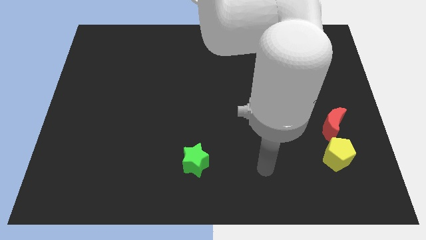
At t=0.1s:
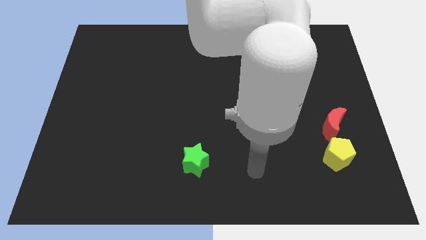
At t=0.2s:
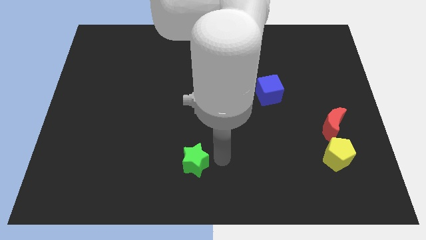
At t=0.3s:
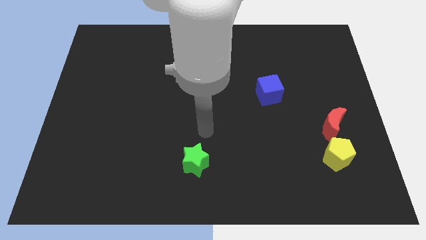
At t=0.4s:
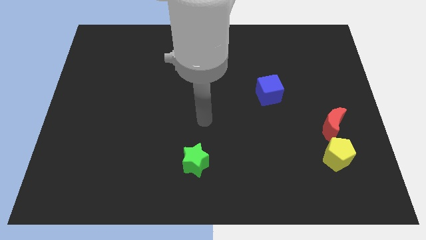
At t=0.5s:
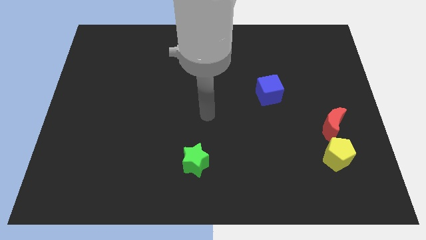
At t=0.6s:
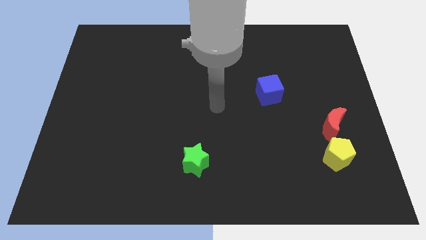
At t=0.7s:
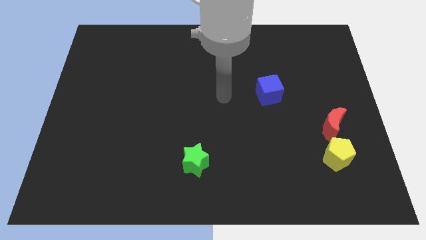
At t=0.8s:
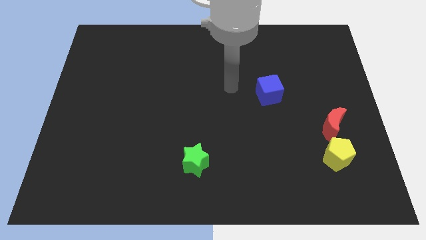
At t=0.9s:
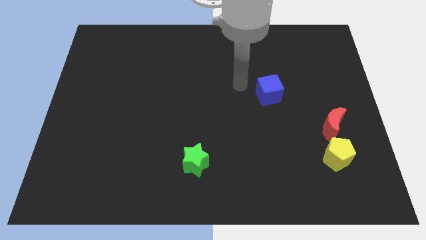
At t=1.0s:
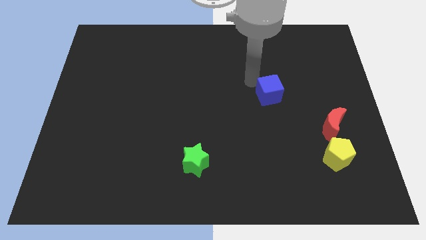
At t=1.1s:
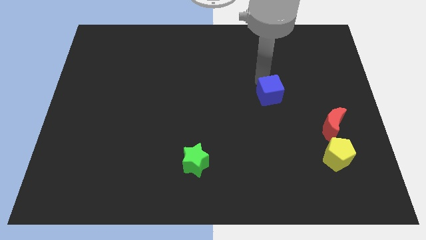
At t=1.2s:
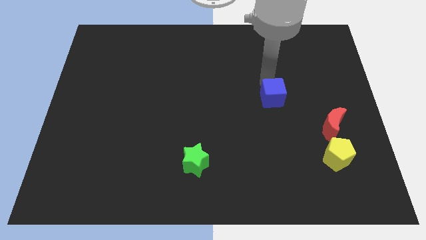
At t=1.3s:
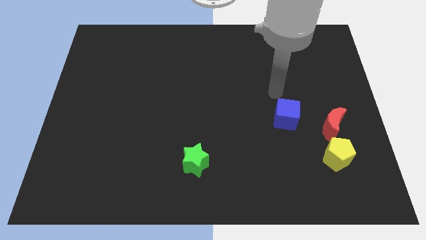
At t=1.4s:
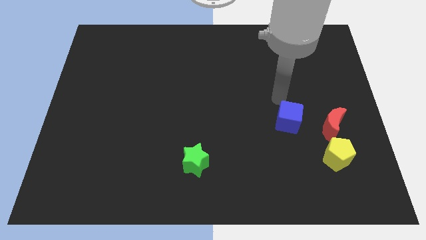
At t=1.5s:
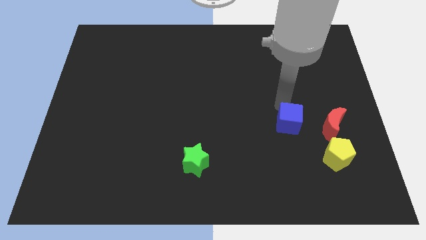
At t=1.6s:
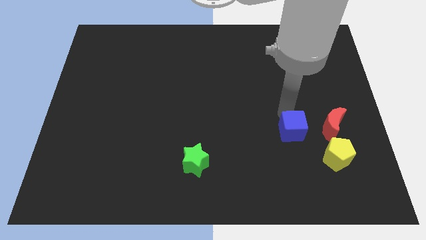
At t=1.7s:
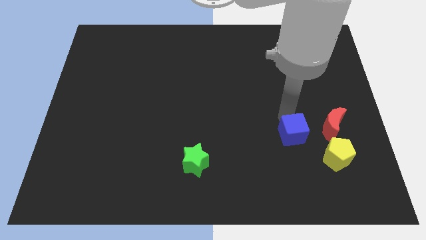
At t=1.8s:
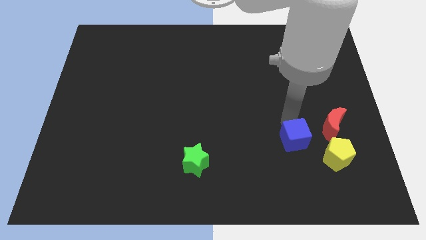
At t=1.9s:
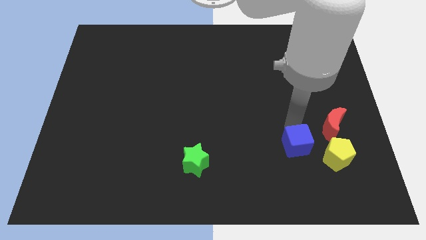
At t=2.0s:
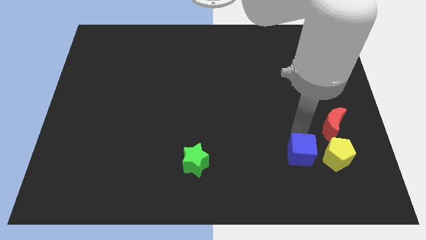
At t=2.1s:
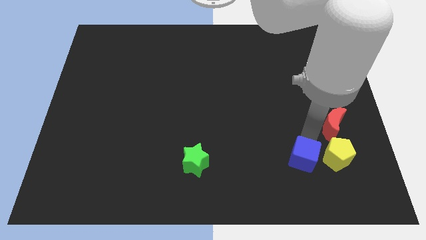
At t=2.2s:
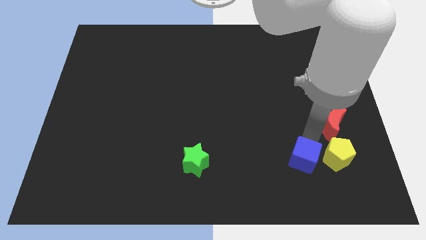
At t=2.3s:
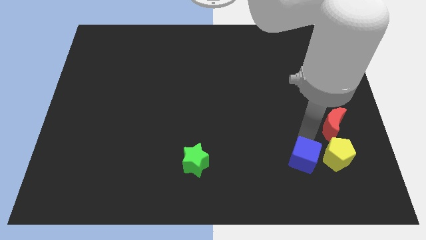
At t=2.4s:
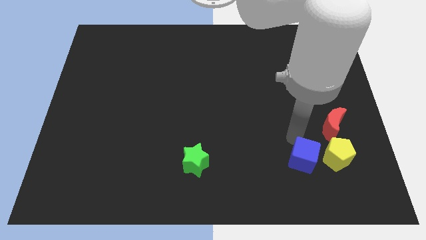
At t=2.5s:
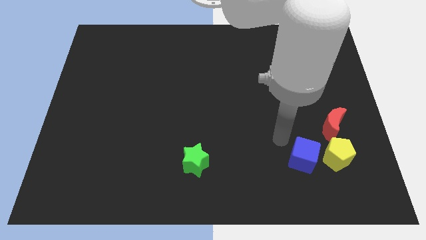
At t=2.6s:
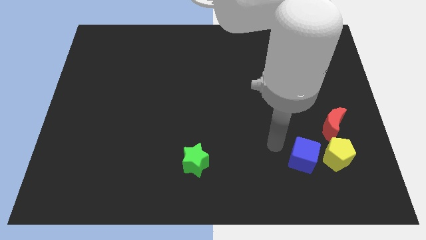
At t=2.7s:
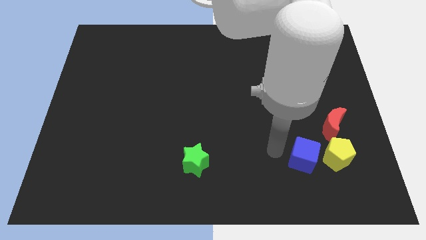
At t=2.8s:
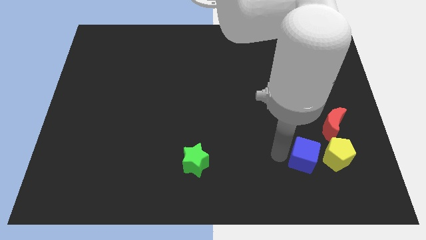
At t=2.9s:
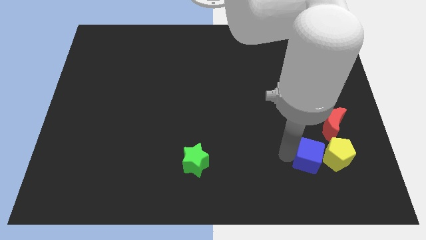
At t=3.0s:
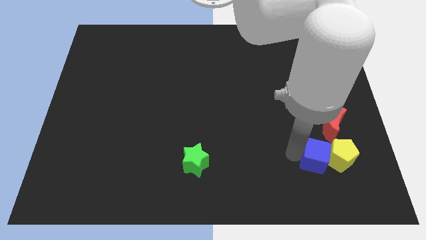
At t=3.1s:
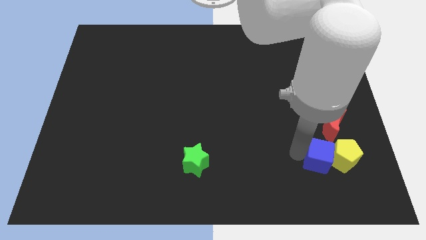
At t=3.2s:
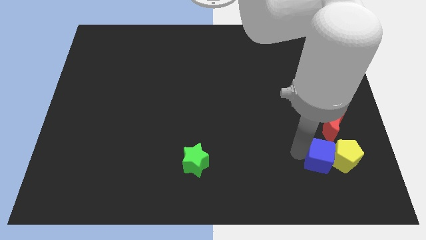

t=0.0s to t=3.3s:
slide the blue block to the yellow block

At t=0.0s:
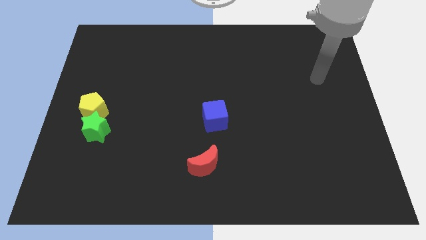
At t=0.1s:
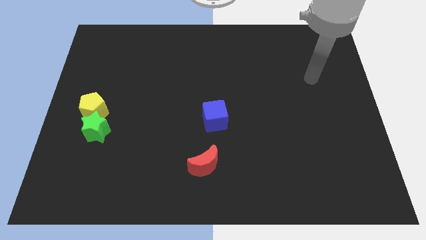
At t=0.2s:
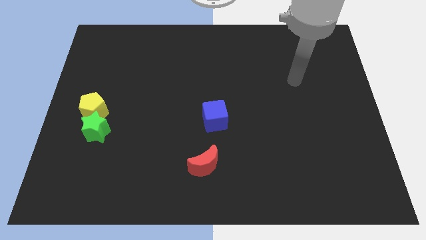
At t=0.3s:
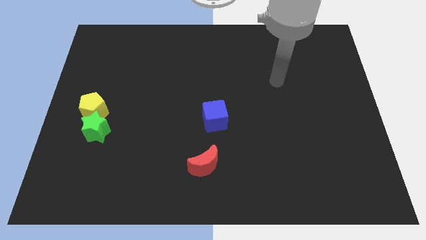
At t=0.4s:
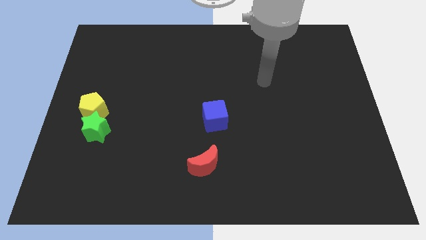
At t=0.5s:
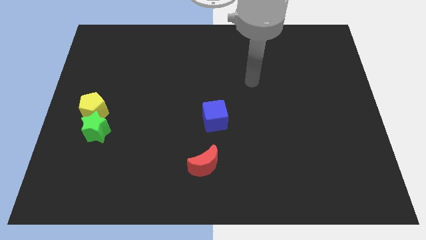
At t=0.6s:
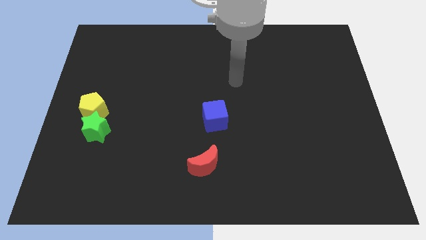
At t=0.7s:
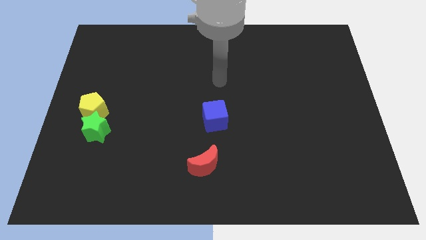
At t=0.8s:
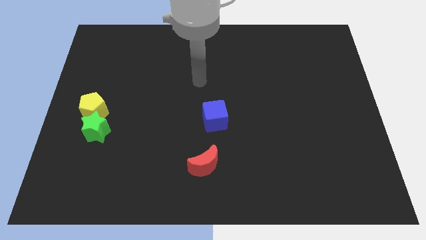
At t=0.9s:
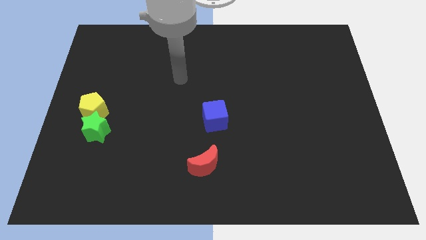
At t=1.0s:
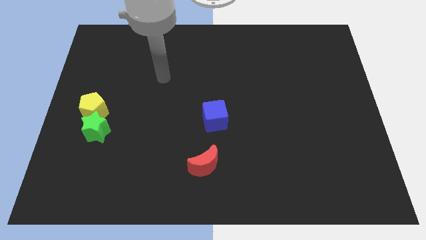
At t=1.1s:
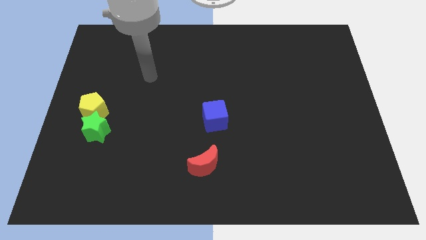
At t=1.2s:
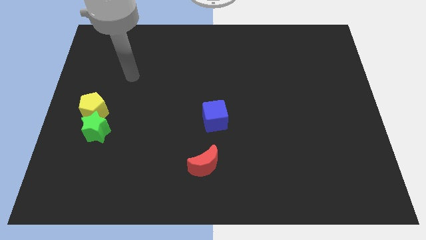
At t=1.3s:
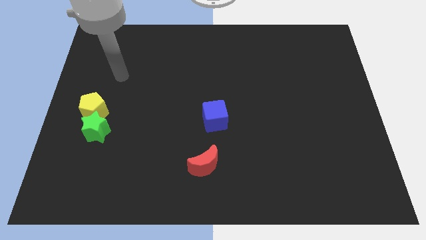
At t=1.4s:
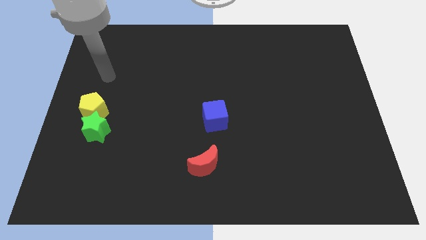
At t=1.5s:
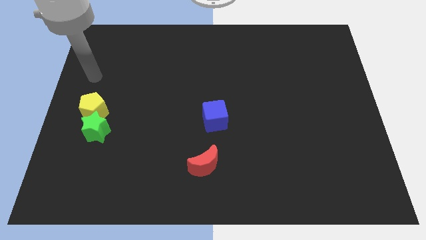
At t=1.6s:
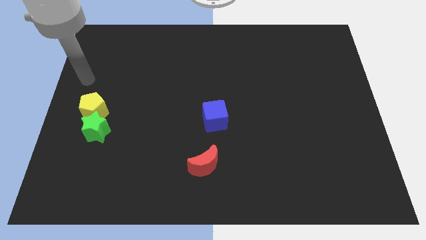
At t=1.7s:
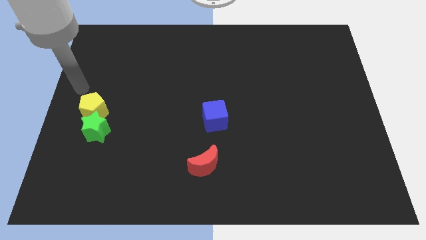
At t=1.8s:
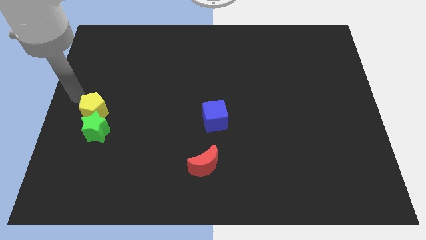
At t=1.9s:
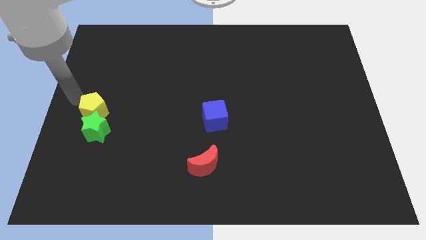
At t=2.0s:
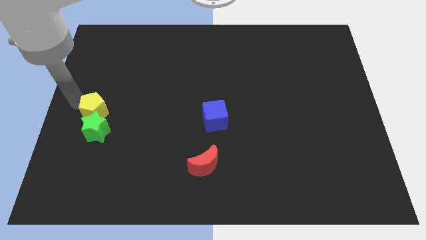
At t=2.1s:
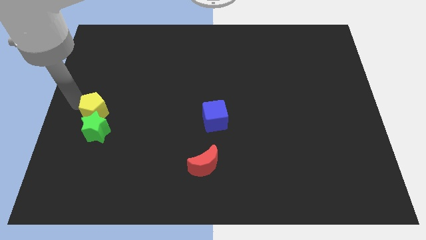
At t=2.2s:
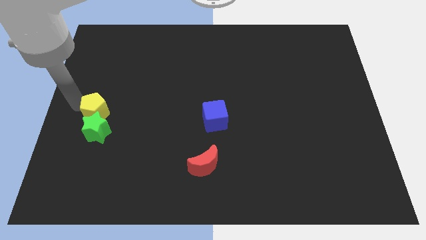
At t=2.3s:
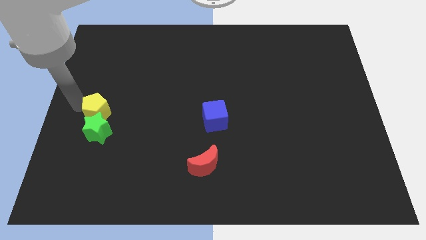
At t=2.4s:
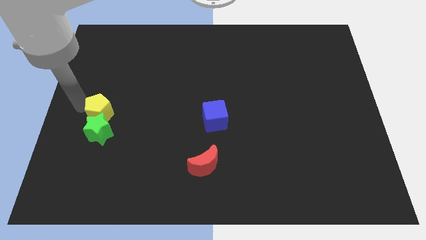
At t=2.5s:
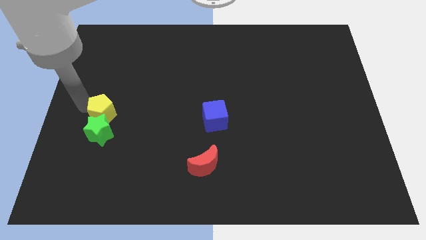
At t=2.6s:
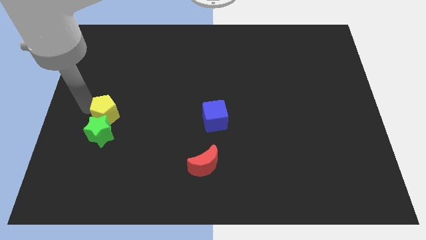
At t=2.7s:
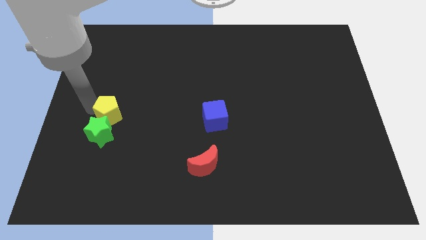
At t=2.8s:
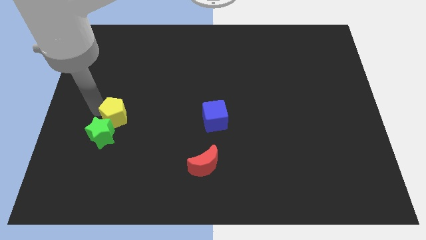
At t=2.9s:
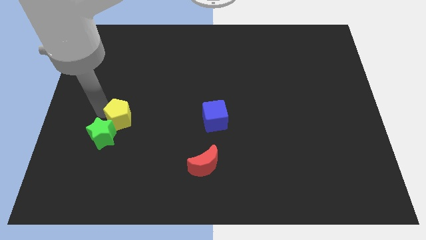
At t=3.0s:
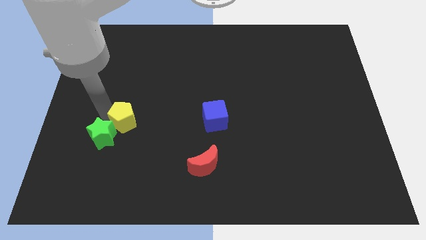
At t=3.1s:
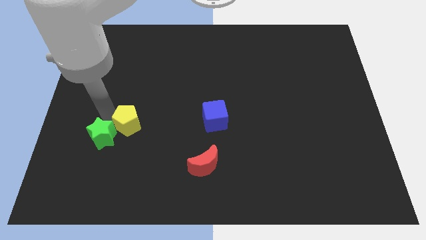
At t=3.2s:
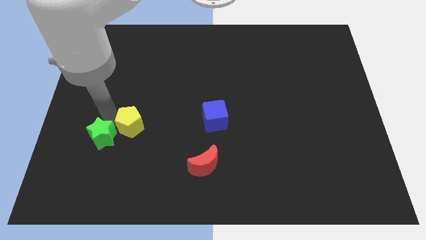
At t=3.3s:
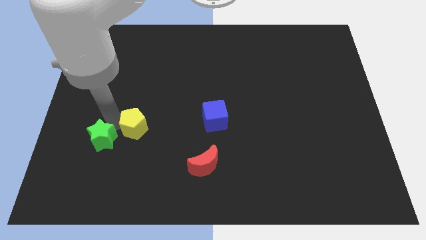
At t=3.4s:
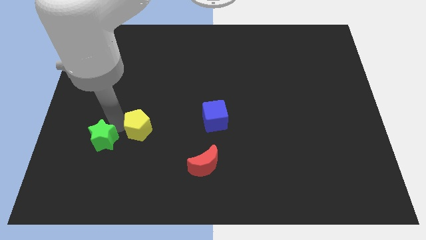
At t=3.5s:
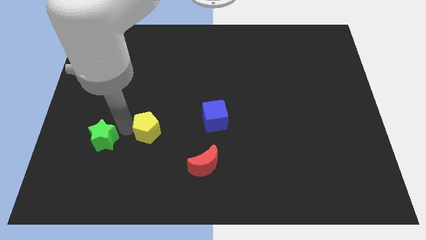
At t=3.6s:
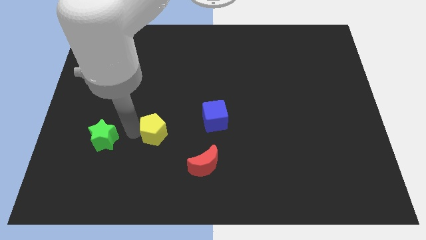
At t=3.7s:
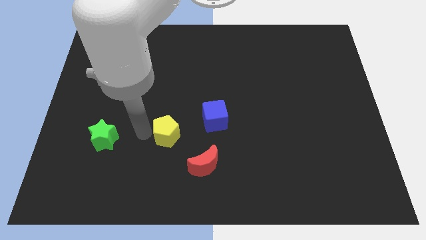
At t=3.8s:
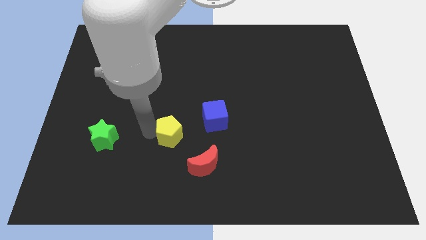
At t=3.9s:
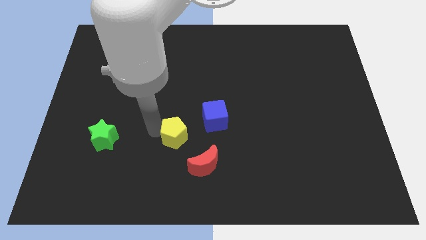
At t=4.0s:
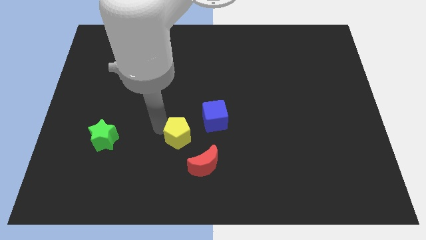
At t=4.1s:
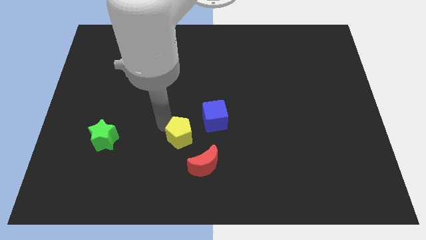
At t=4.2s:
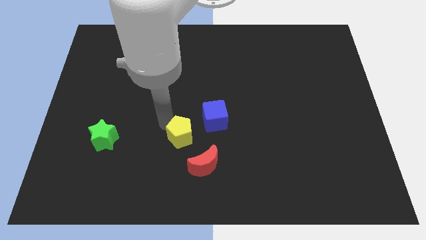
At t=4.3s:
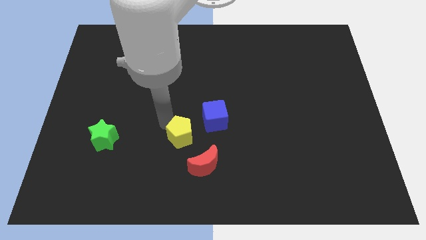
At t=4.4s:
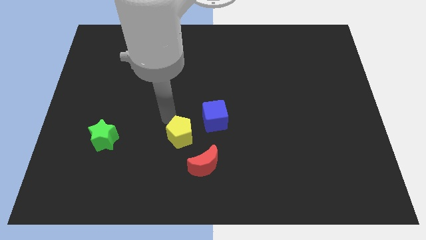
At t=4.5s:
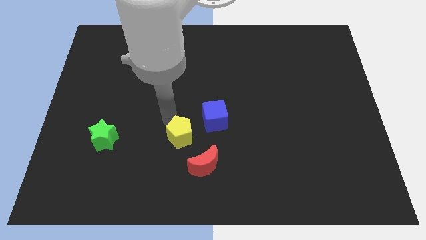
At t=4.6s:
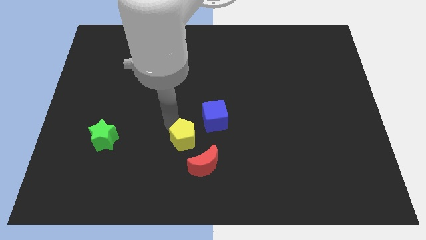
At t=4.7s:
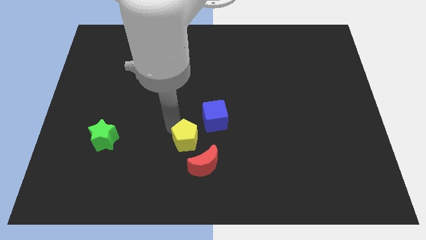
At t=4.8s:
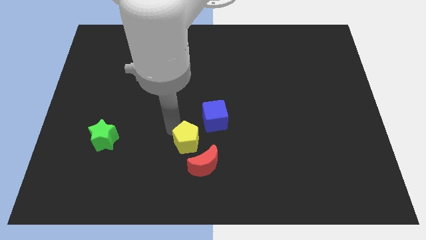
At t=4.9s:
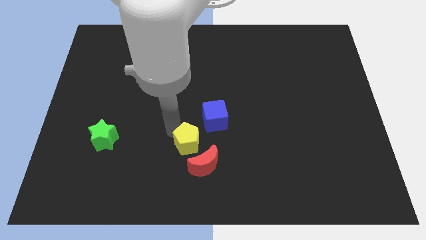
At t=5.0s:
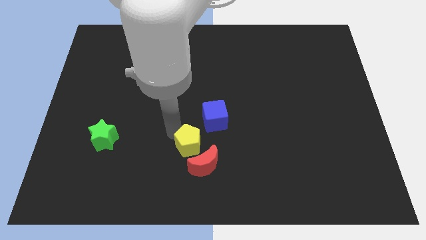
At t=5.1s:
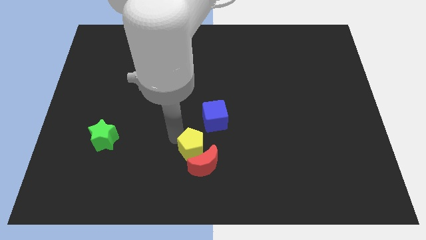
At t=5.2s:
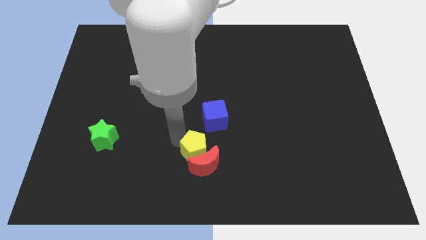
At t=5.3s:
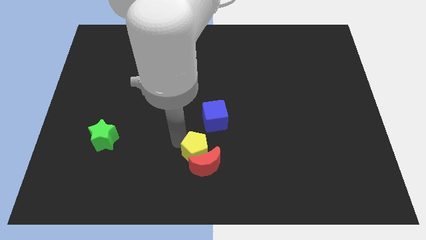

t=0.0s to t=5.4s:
move the pentagon close to the red moon

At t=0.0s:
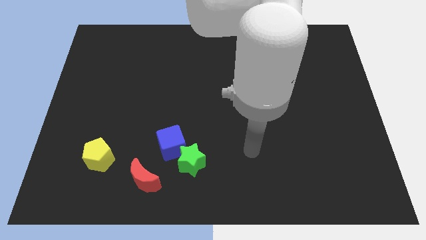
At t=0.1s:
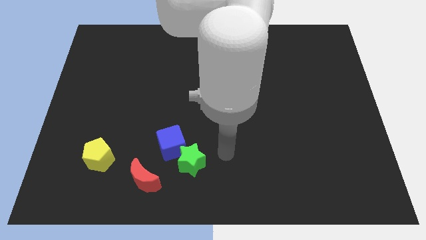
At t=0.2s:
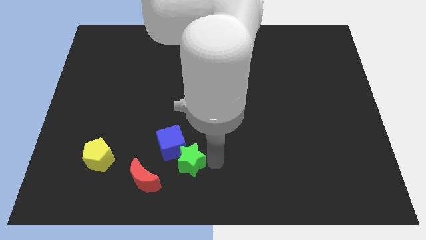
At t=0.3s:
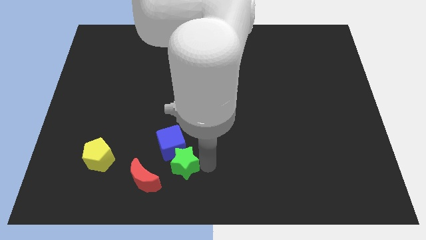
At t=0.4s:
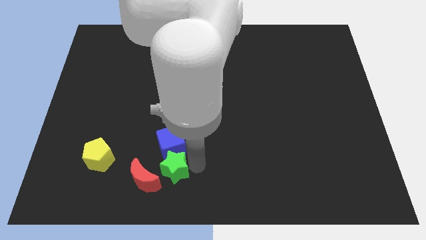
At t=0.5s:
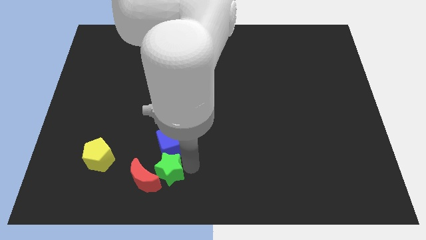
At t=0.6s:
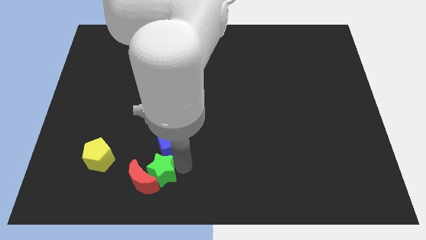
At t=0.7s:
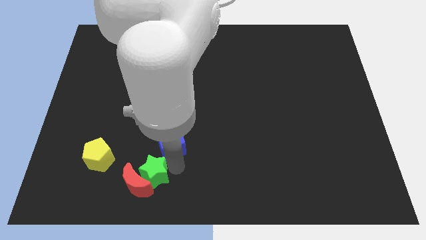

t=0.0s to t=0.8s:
slide the star towards the red moon
